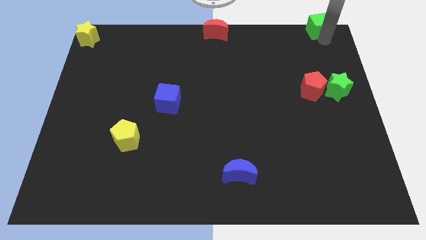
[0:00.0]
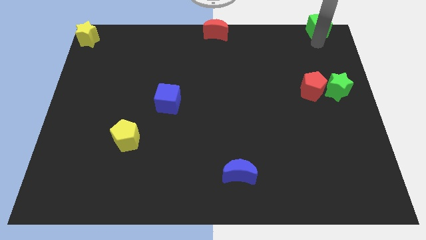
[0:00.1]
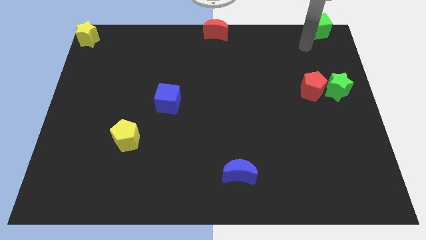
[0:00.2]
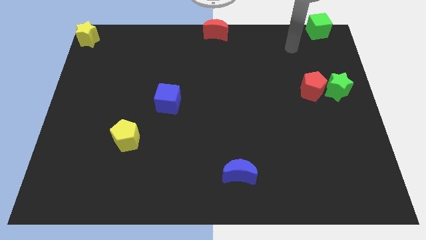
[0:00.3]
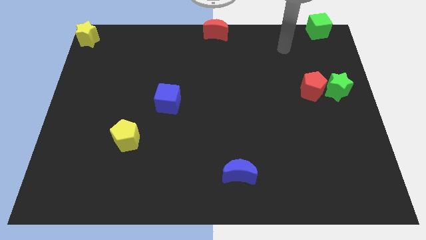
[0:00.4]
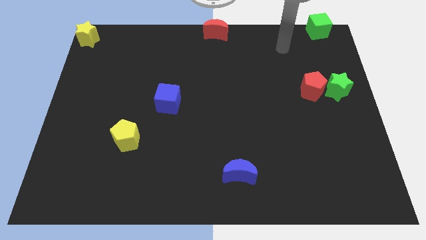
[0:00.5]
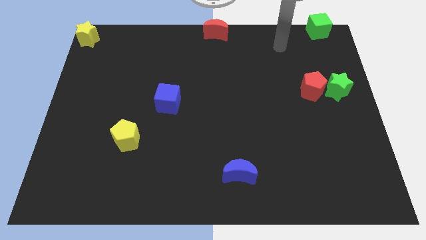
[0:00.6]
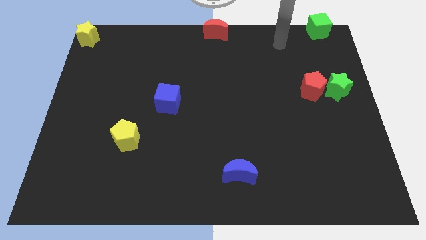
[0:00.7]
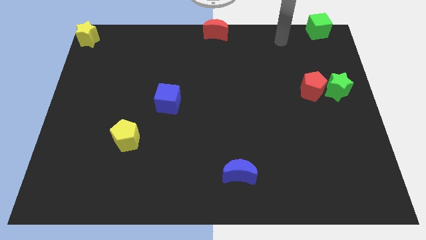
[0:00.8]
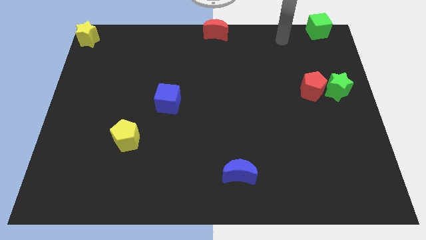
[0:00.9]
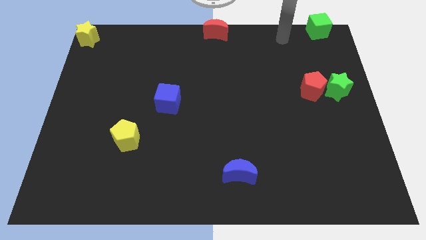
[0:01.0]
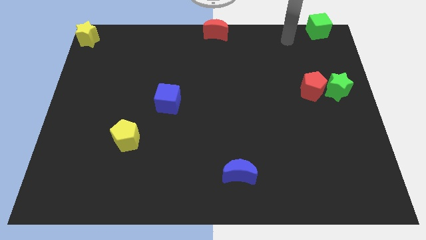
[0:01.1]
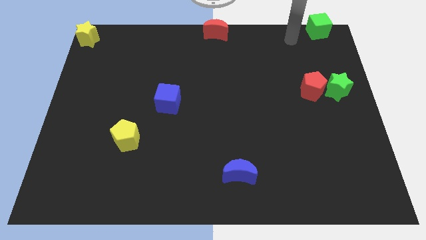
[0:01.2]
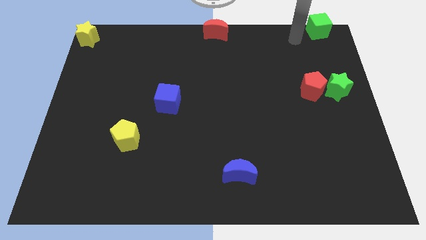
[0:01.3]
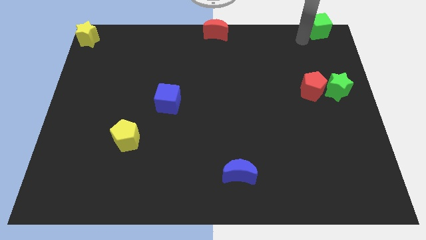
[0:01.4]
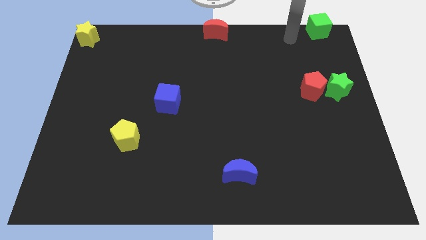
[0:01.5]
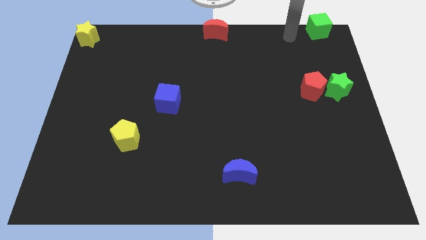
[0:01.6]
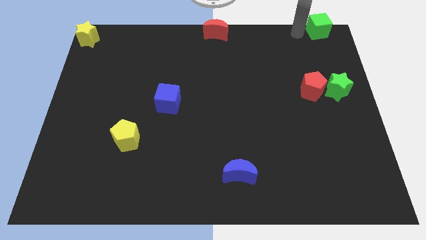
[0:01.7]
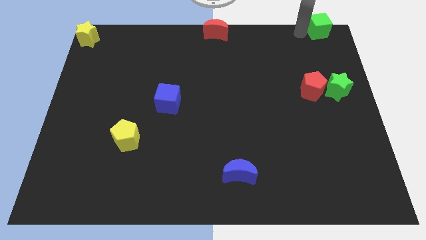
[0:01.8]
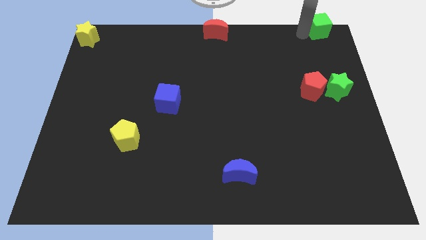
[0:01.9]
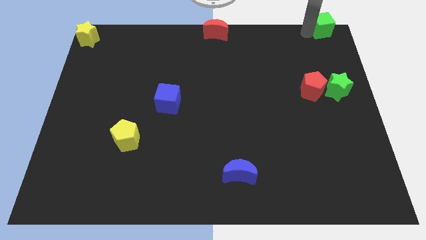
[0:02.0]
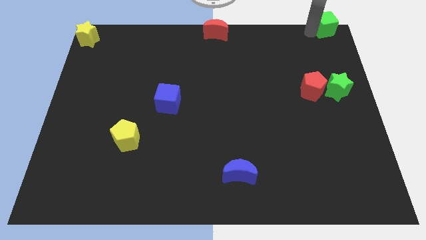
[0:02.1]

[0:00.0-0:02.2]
slightly push the green cube towards the top right side of the board

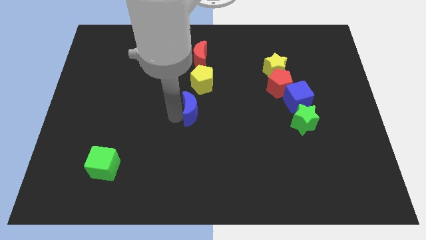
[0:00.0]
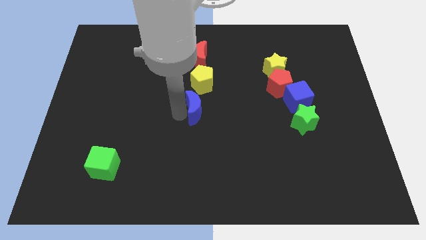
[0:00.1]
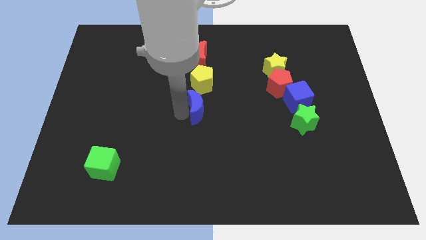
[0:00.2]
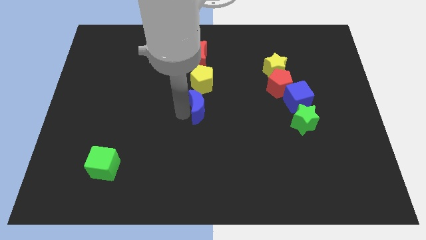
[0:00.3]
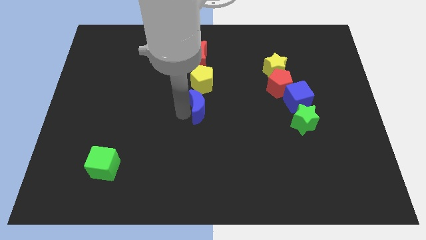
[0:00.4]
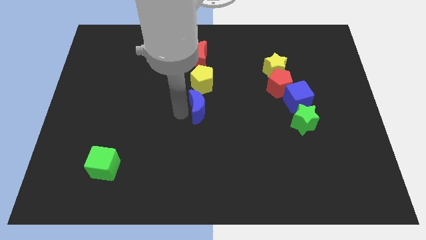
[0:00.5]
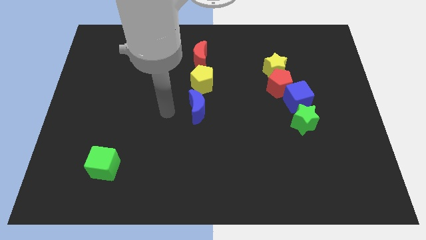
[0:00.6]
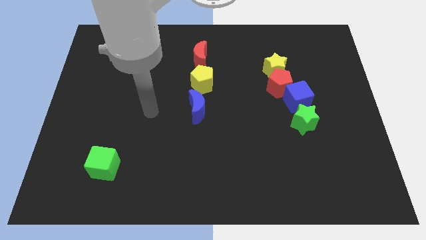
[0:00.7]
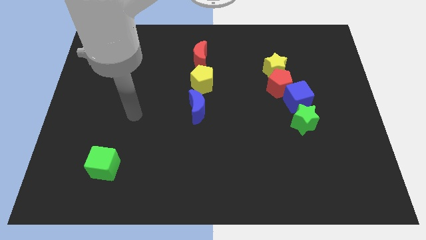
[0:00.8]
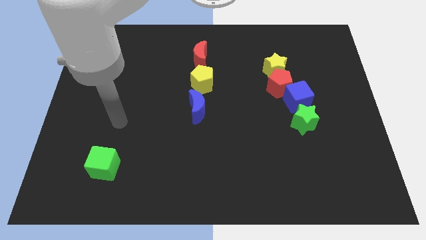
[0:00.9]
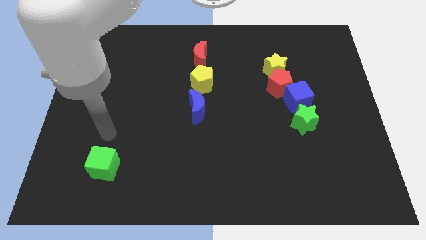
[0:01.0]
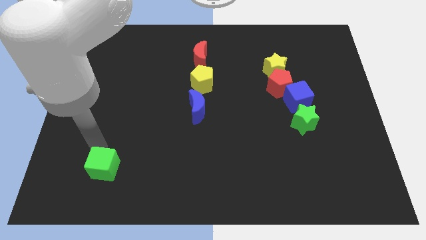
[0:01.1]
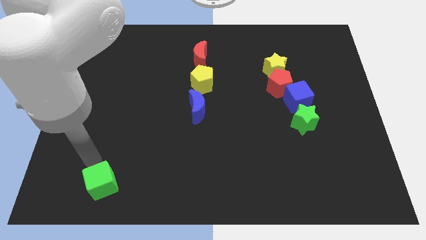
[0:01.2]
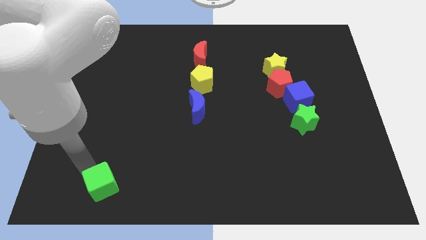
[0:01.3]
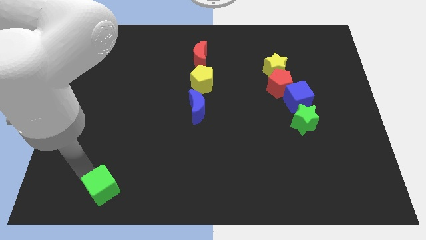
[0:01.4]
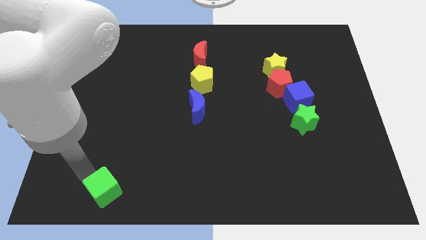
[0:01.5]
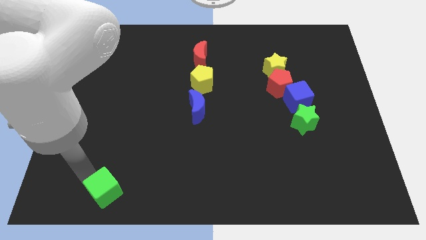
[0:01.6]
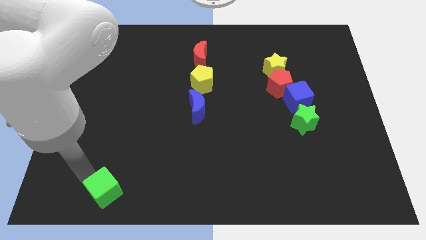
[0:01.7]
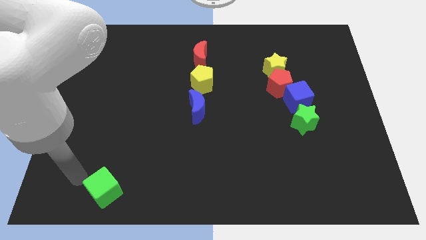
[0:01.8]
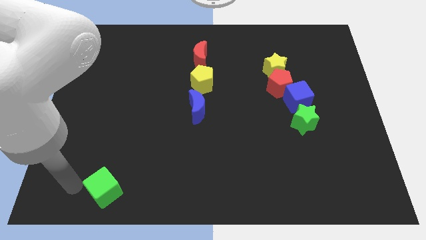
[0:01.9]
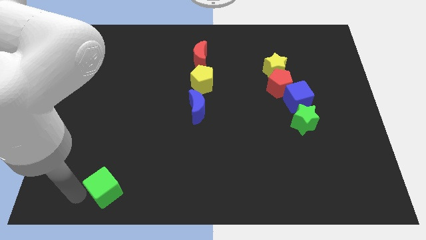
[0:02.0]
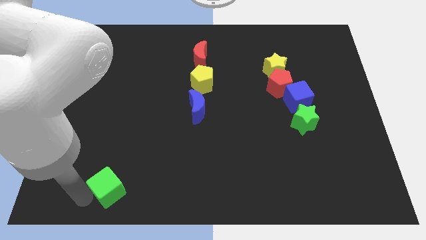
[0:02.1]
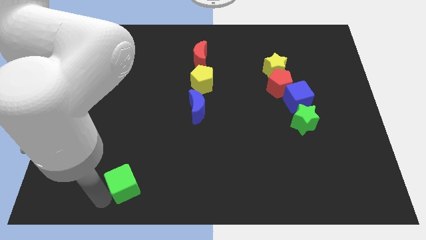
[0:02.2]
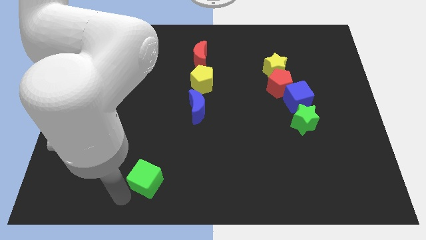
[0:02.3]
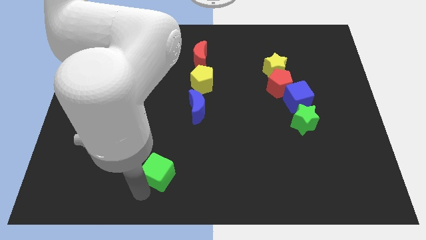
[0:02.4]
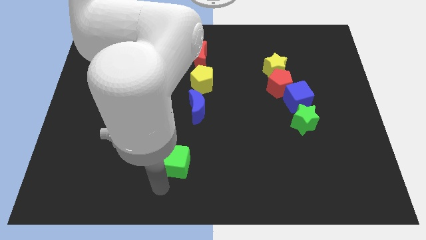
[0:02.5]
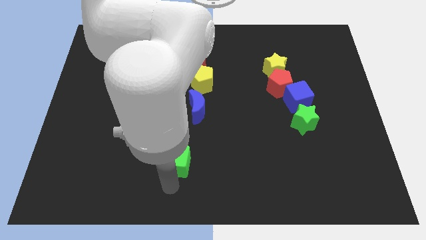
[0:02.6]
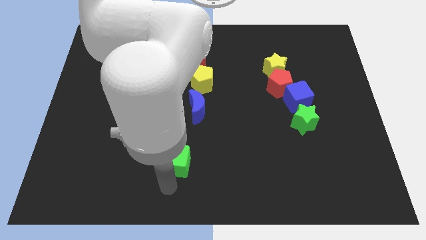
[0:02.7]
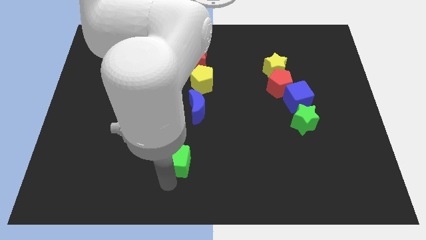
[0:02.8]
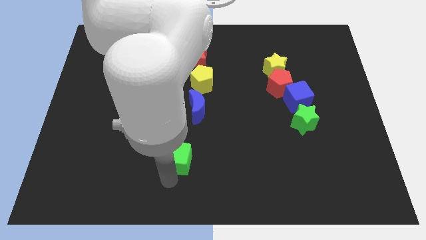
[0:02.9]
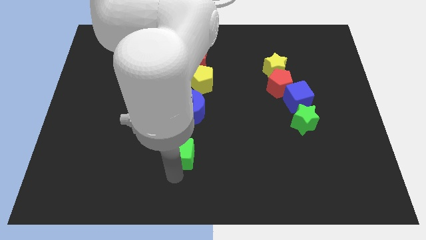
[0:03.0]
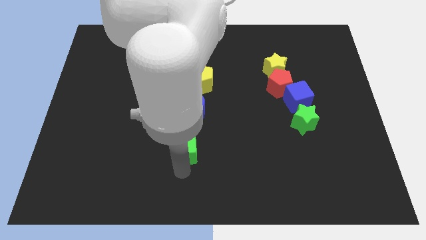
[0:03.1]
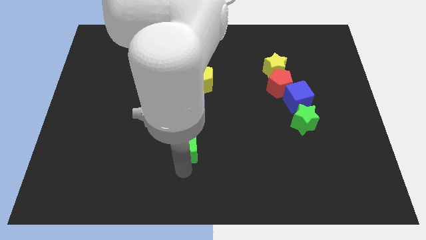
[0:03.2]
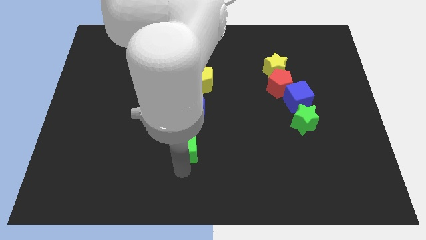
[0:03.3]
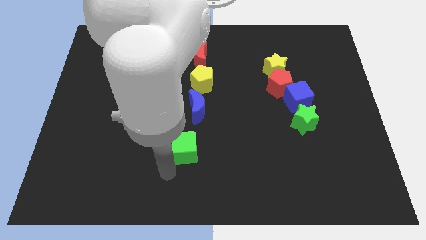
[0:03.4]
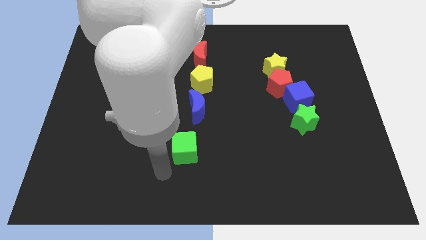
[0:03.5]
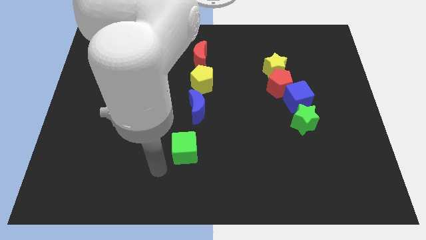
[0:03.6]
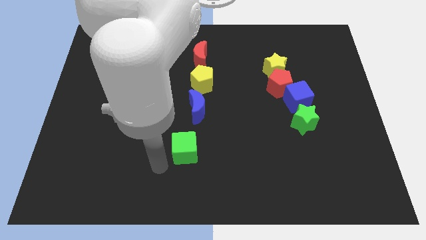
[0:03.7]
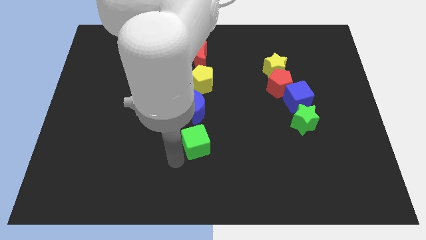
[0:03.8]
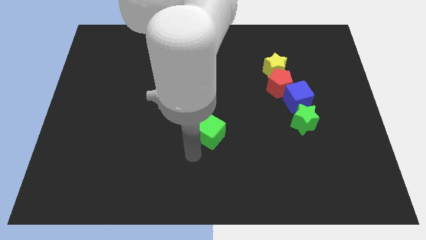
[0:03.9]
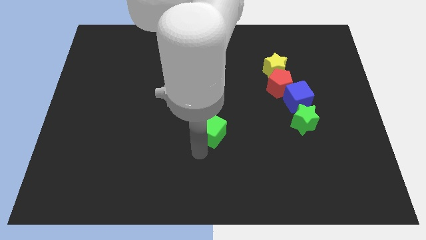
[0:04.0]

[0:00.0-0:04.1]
place the green cube down to the blue moon

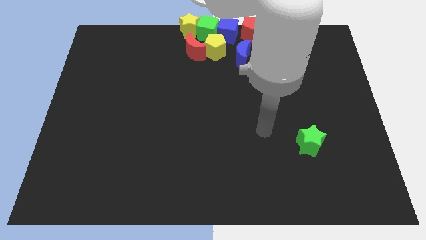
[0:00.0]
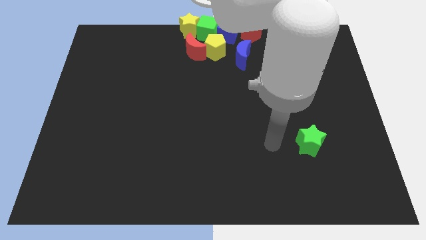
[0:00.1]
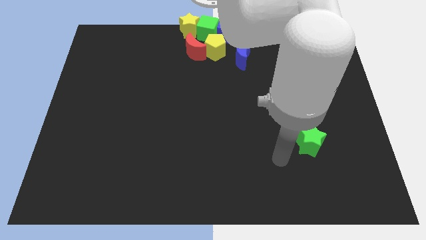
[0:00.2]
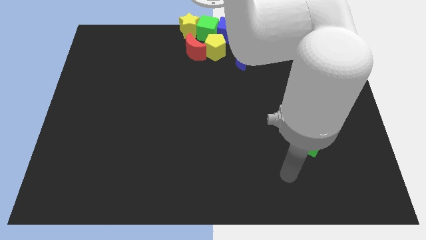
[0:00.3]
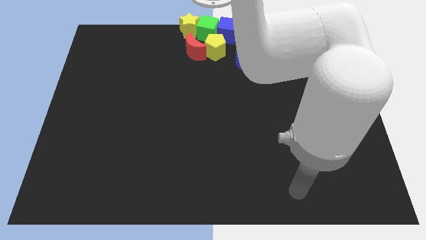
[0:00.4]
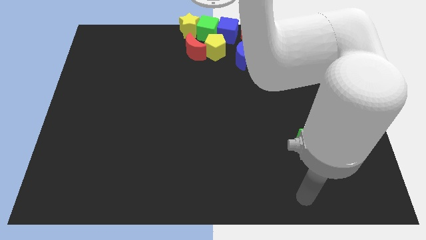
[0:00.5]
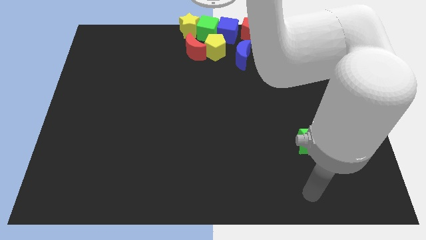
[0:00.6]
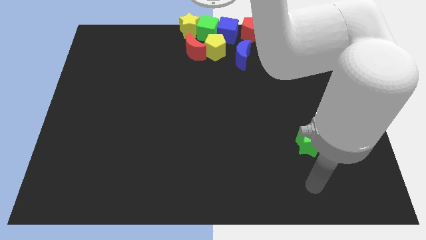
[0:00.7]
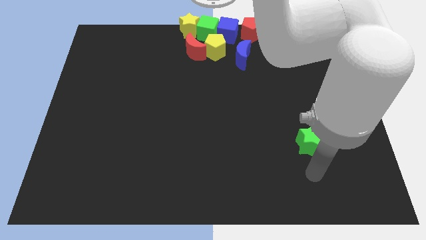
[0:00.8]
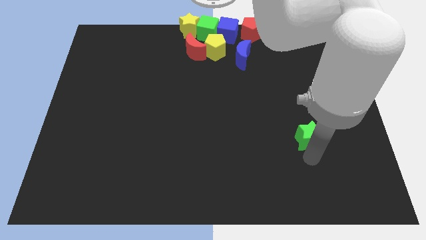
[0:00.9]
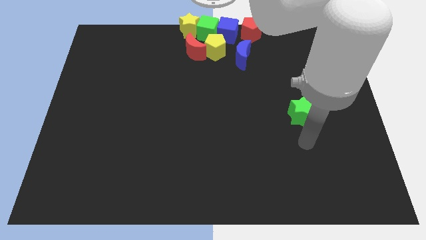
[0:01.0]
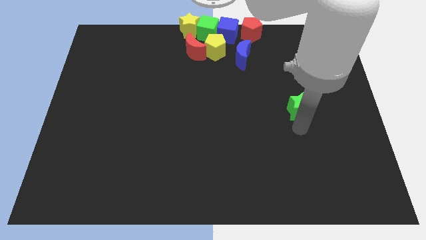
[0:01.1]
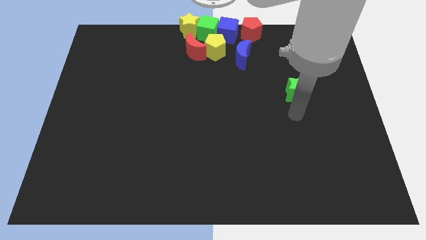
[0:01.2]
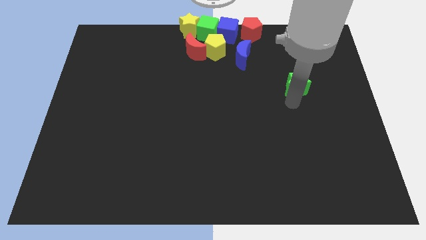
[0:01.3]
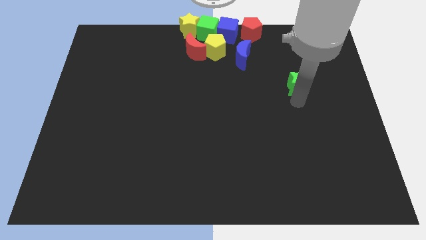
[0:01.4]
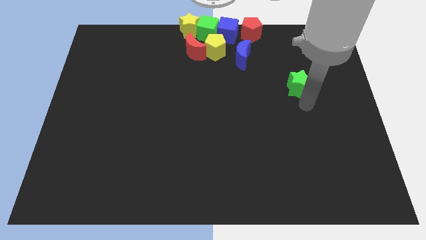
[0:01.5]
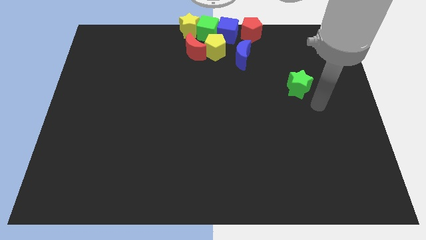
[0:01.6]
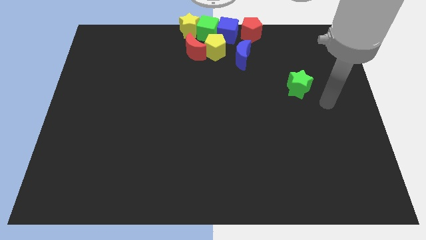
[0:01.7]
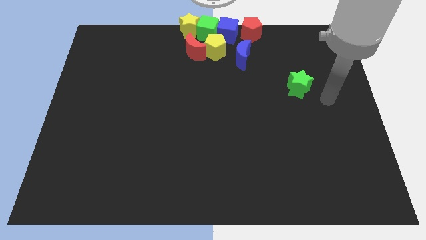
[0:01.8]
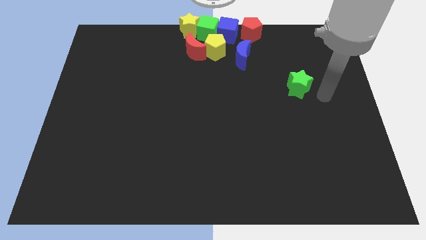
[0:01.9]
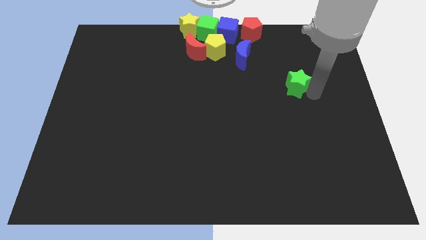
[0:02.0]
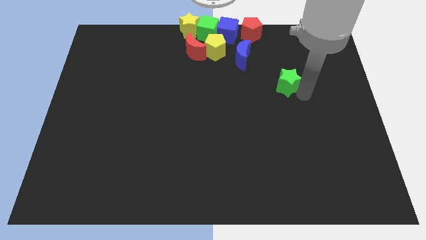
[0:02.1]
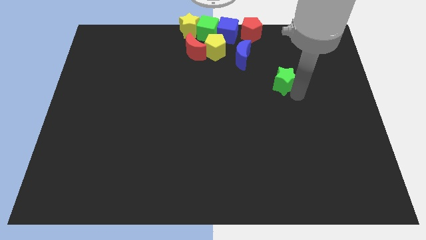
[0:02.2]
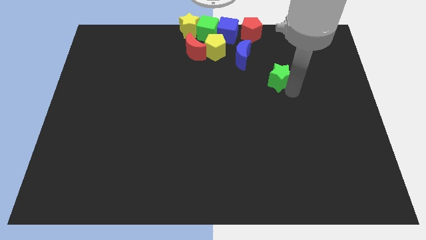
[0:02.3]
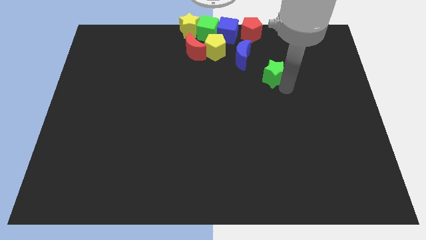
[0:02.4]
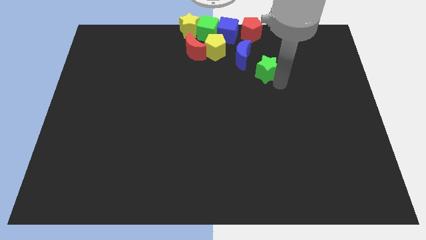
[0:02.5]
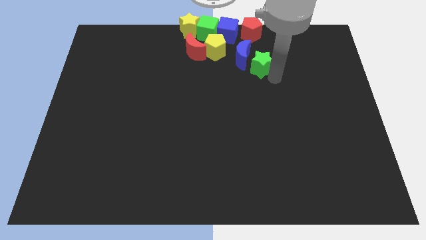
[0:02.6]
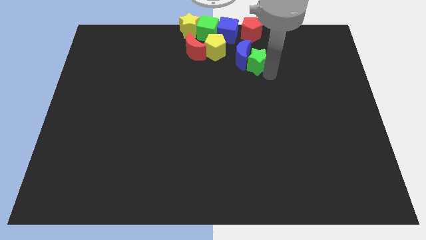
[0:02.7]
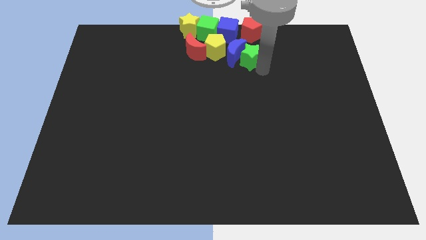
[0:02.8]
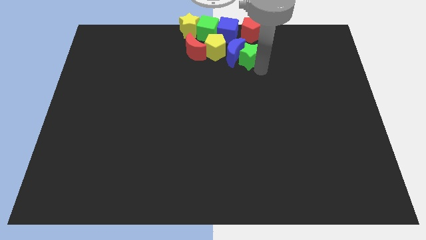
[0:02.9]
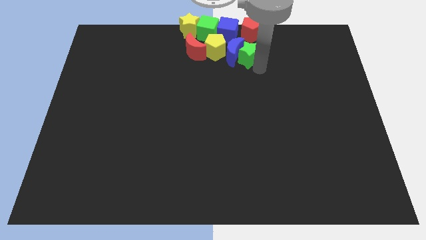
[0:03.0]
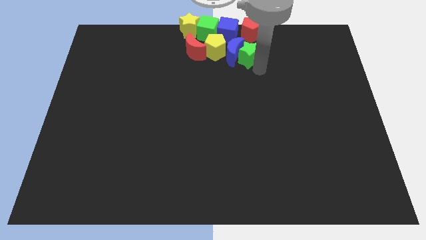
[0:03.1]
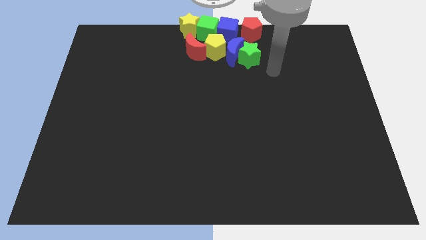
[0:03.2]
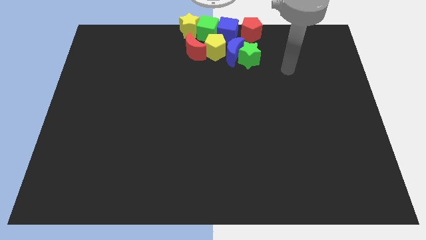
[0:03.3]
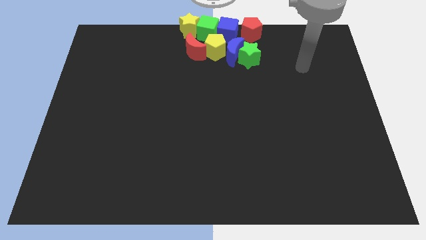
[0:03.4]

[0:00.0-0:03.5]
move green star into the group of blocks
